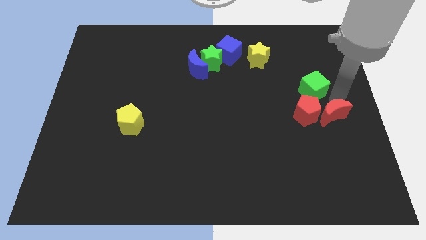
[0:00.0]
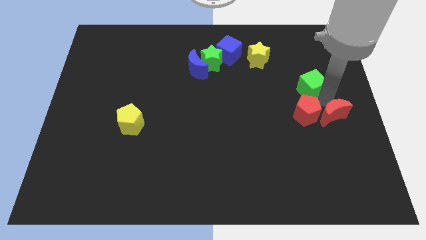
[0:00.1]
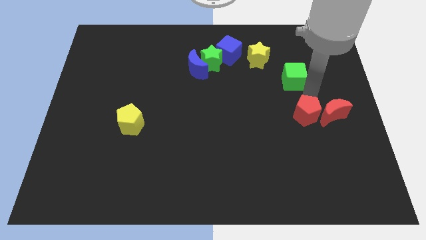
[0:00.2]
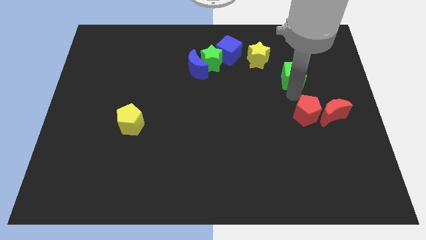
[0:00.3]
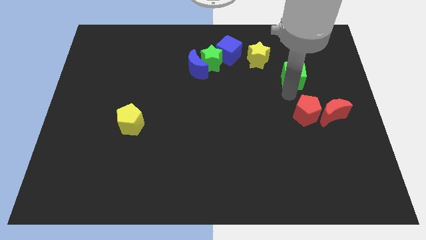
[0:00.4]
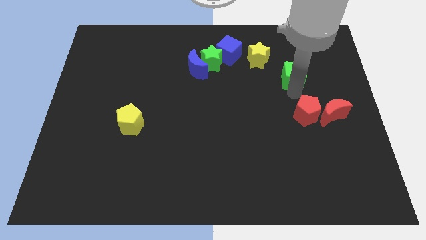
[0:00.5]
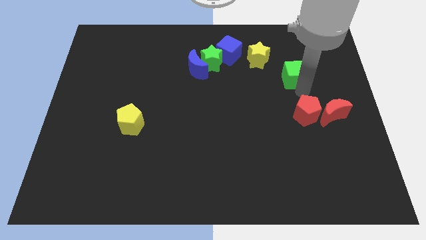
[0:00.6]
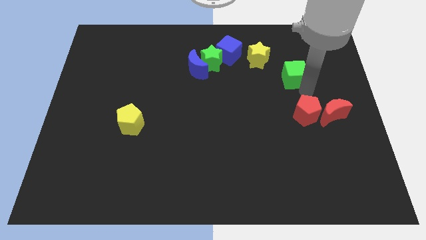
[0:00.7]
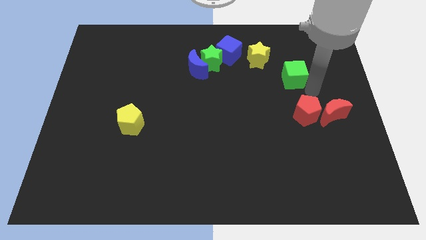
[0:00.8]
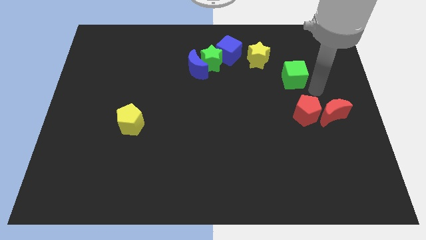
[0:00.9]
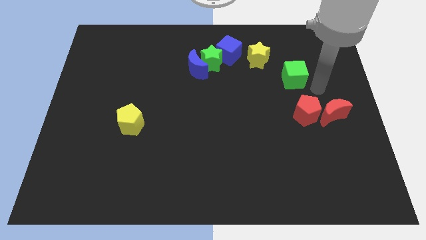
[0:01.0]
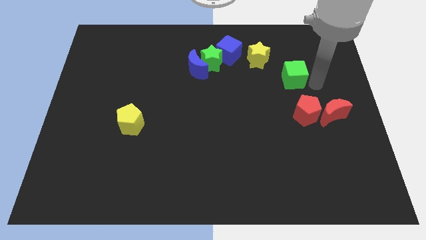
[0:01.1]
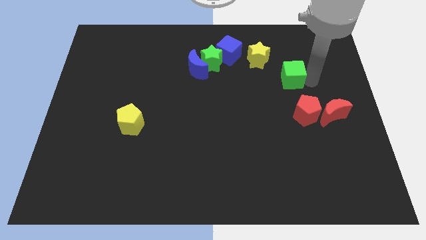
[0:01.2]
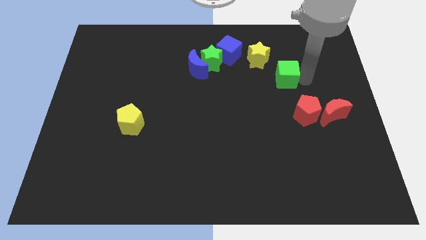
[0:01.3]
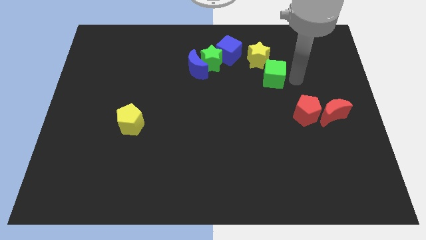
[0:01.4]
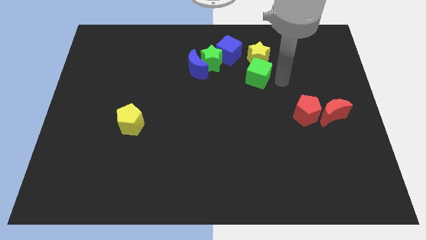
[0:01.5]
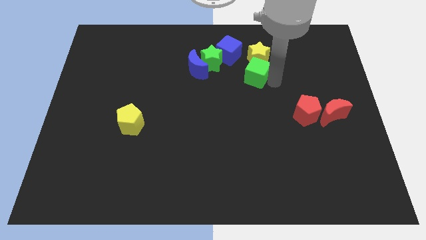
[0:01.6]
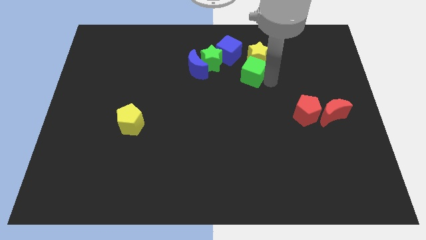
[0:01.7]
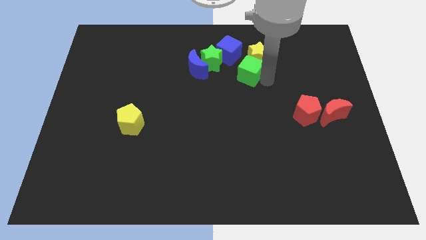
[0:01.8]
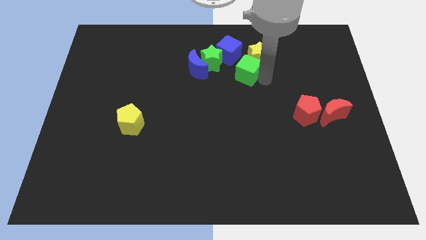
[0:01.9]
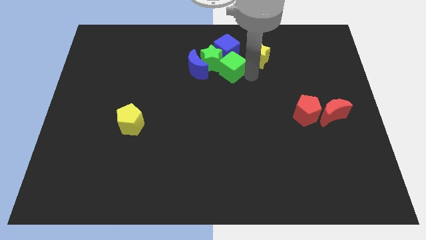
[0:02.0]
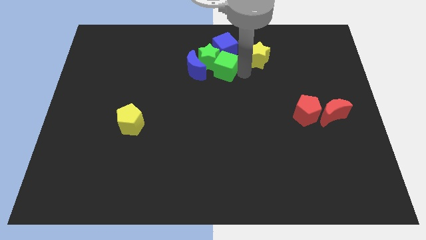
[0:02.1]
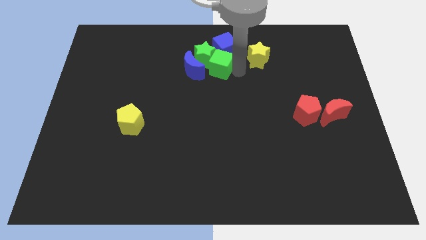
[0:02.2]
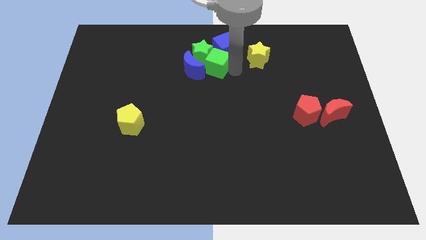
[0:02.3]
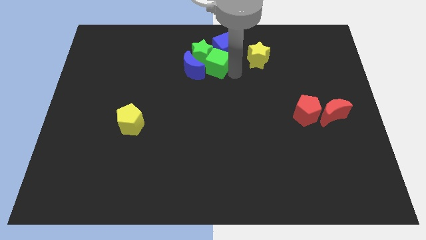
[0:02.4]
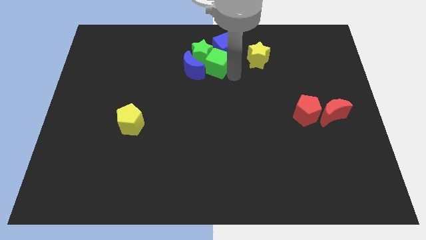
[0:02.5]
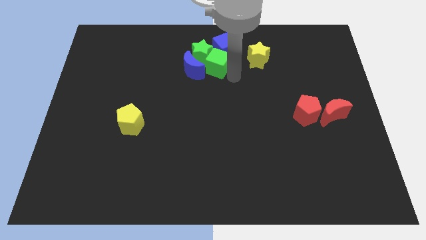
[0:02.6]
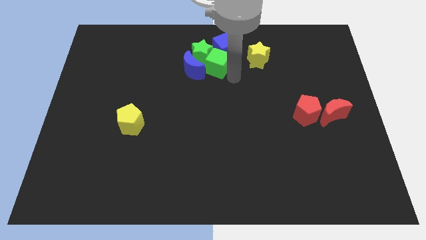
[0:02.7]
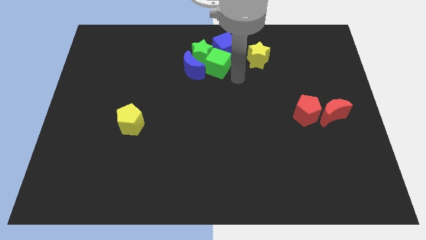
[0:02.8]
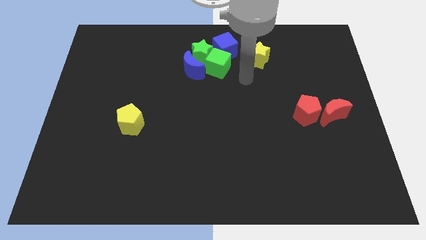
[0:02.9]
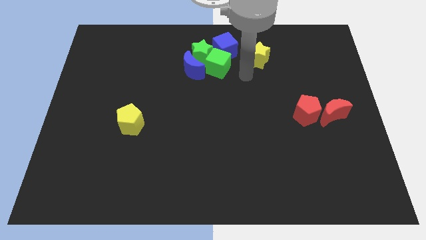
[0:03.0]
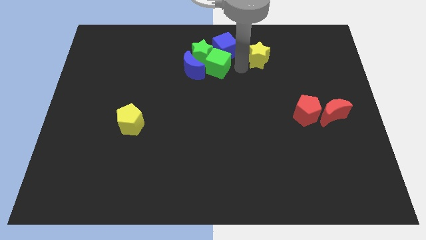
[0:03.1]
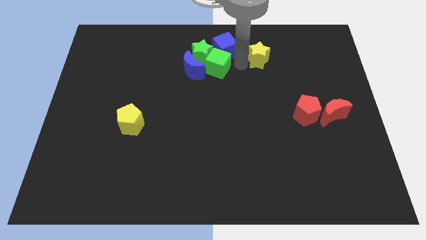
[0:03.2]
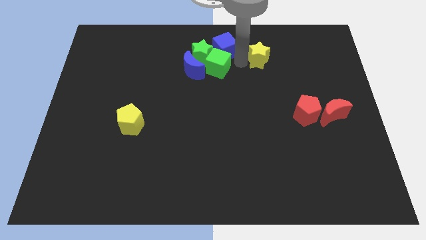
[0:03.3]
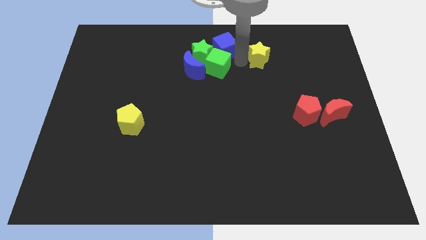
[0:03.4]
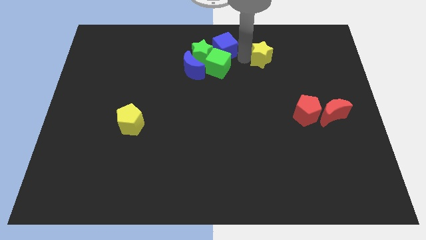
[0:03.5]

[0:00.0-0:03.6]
push a group of blocks upward

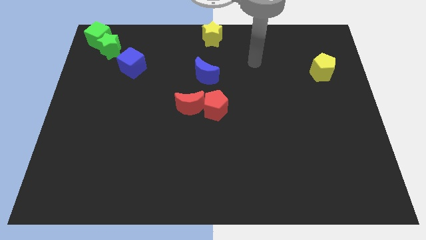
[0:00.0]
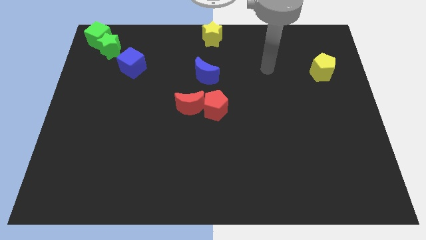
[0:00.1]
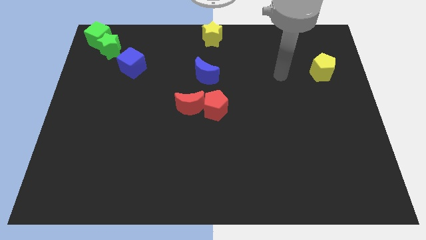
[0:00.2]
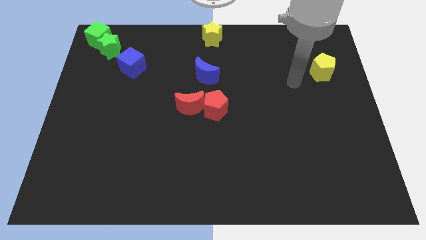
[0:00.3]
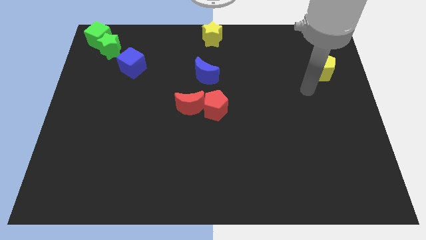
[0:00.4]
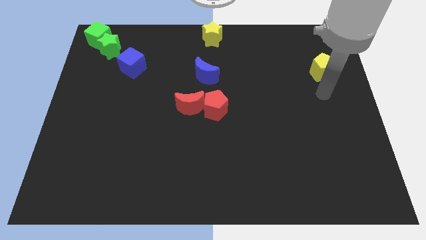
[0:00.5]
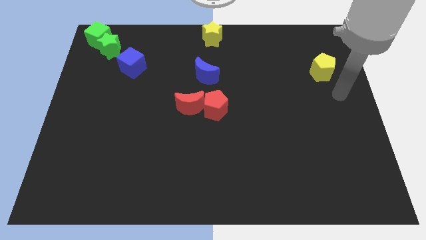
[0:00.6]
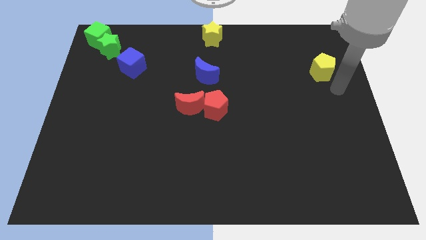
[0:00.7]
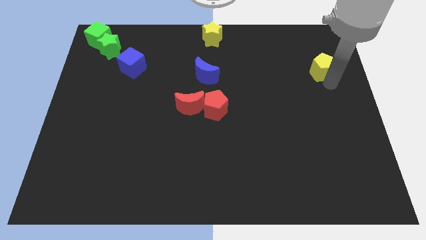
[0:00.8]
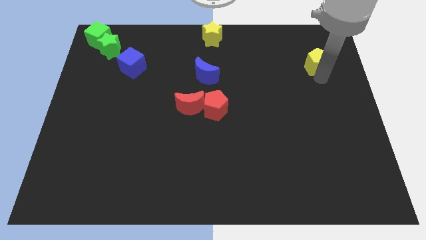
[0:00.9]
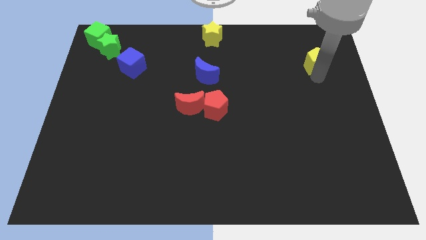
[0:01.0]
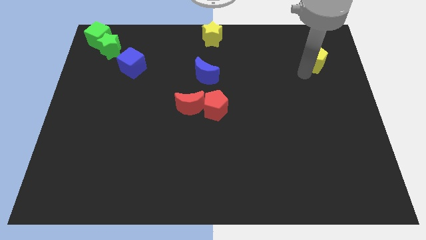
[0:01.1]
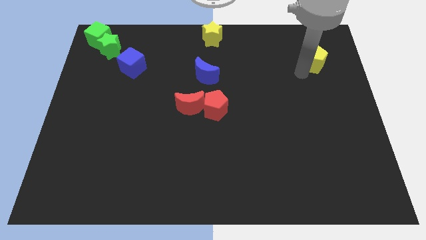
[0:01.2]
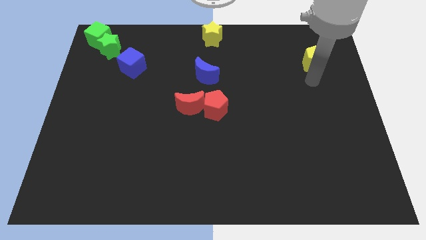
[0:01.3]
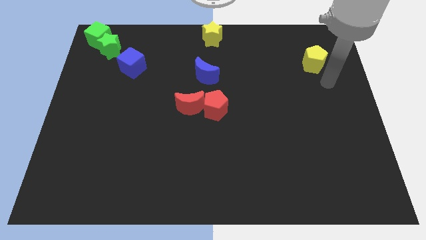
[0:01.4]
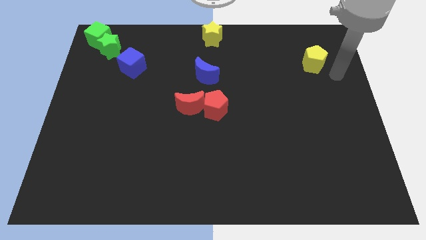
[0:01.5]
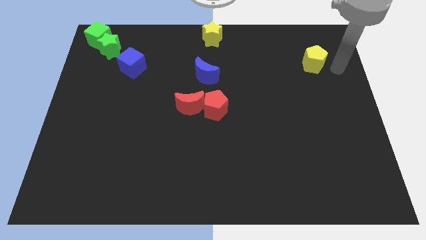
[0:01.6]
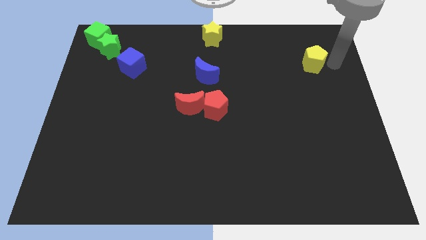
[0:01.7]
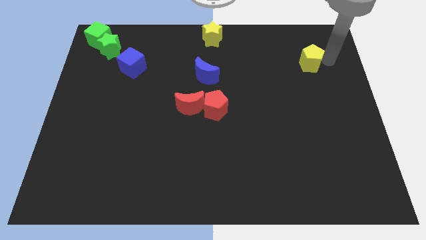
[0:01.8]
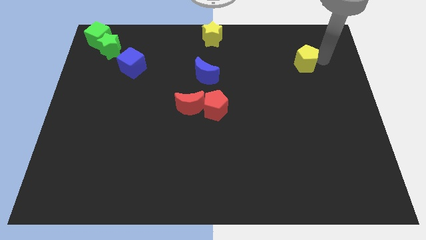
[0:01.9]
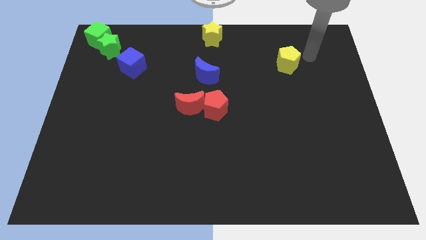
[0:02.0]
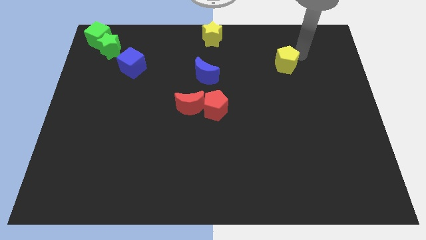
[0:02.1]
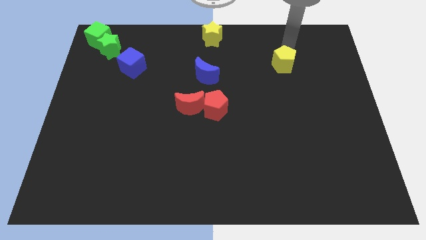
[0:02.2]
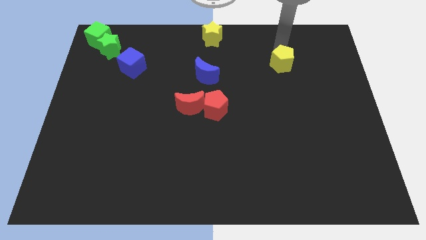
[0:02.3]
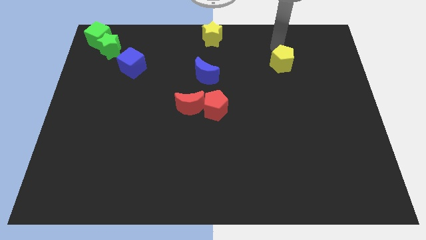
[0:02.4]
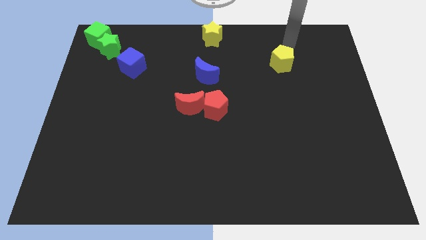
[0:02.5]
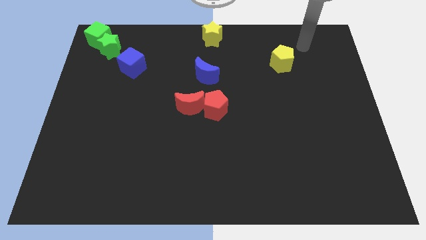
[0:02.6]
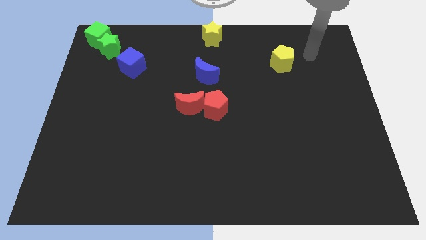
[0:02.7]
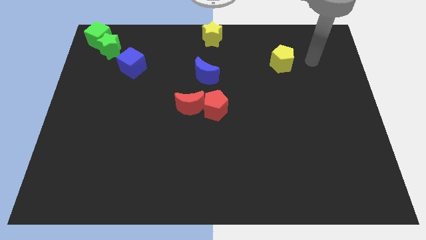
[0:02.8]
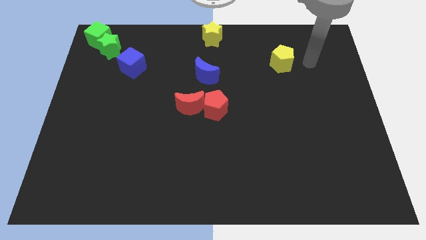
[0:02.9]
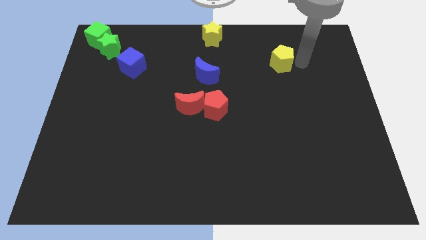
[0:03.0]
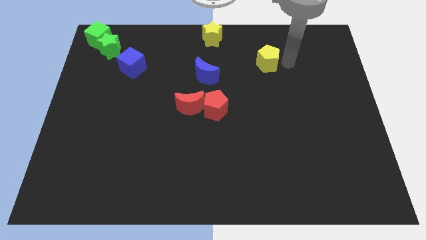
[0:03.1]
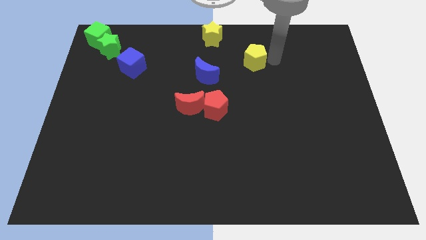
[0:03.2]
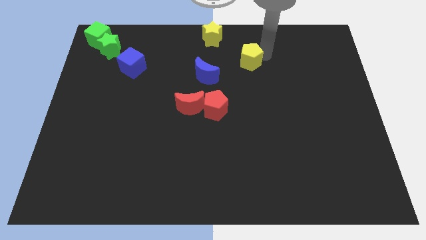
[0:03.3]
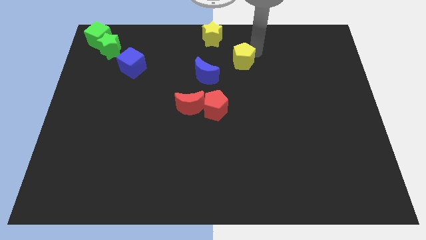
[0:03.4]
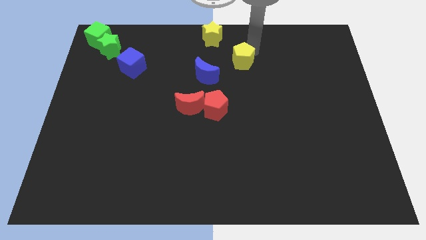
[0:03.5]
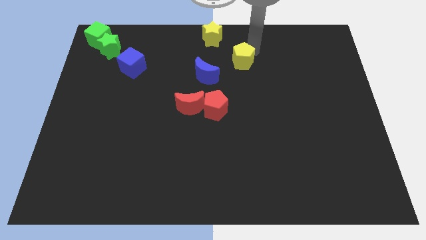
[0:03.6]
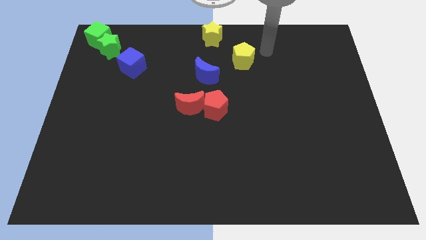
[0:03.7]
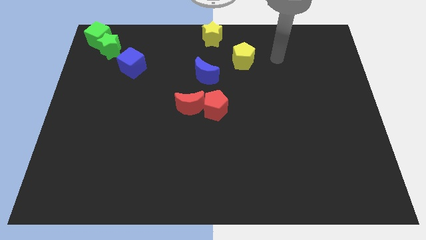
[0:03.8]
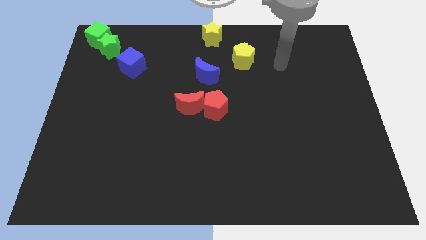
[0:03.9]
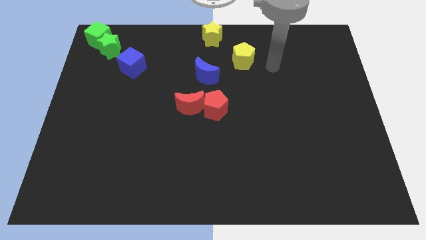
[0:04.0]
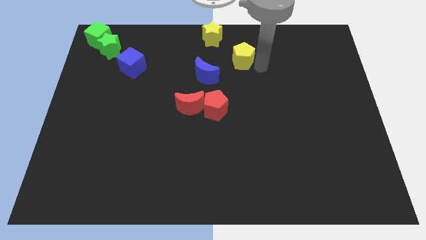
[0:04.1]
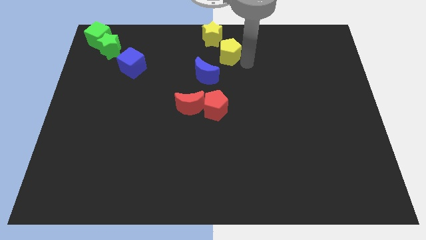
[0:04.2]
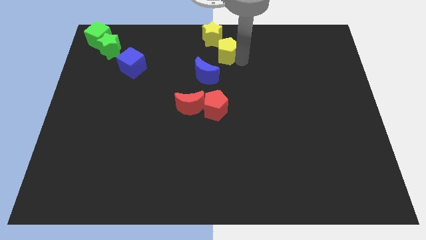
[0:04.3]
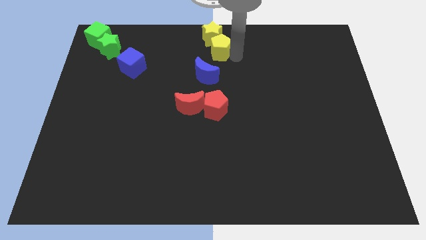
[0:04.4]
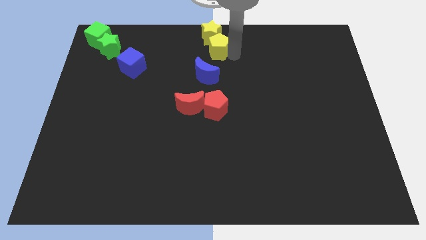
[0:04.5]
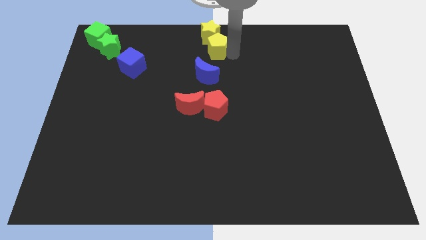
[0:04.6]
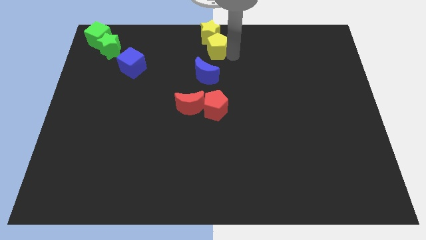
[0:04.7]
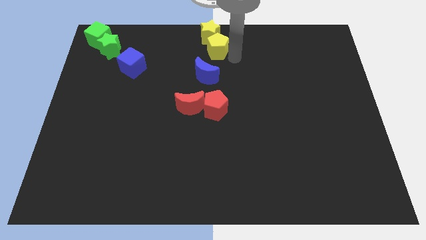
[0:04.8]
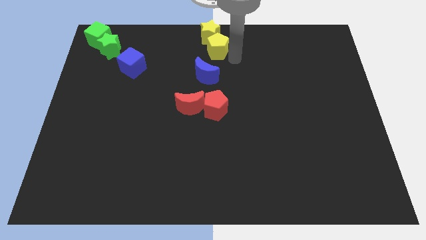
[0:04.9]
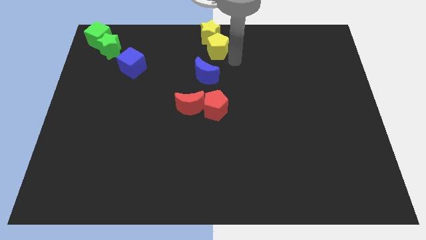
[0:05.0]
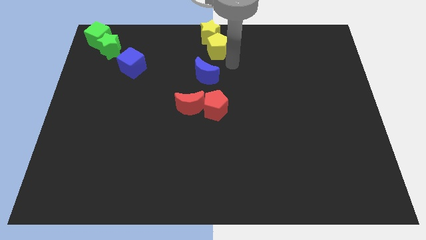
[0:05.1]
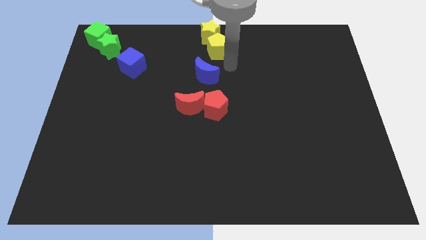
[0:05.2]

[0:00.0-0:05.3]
group up the yellow blocks at the top center
